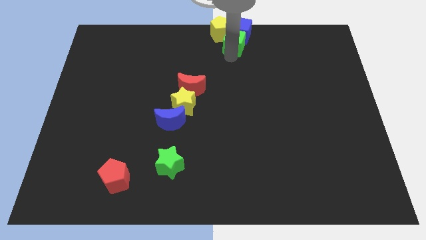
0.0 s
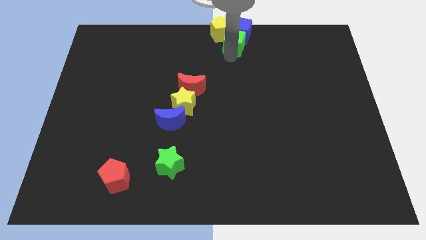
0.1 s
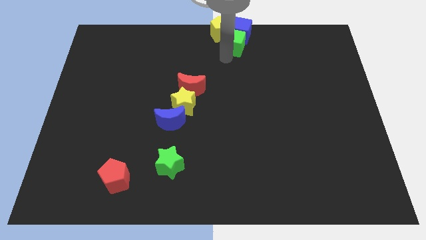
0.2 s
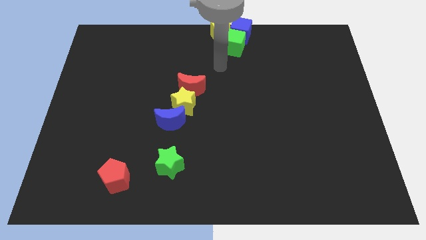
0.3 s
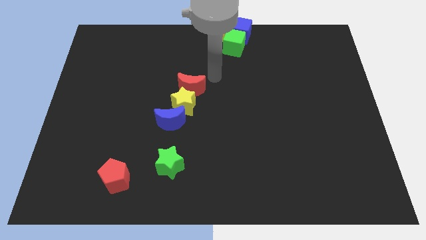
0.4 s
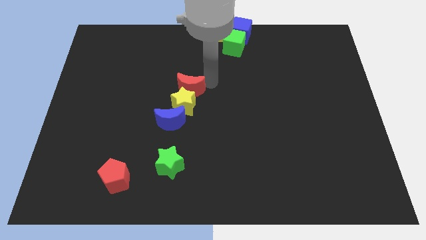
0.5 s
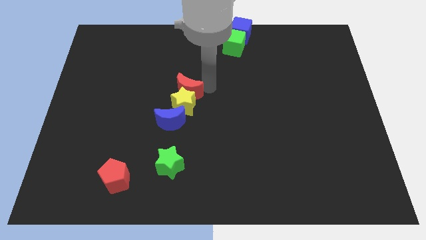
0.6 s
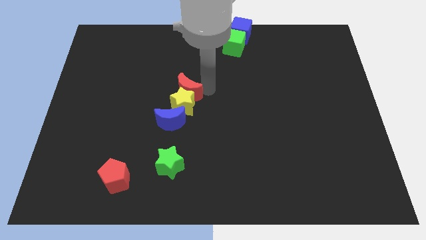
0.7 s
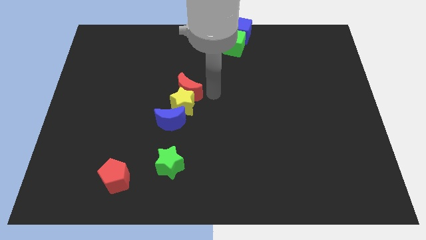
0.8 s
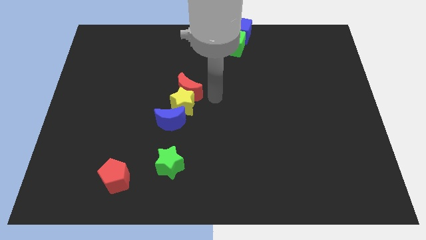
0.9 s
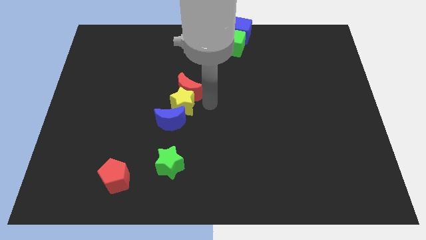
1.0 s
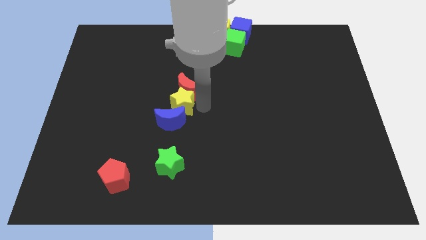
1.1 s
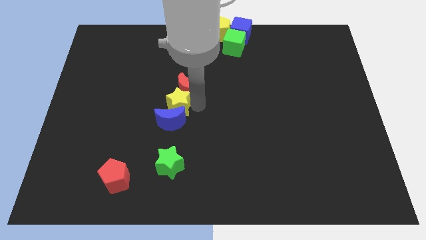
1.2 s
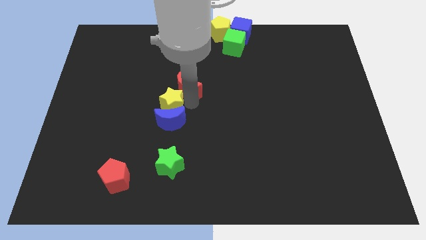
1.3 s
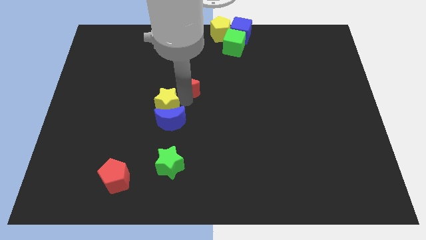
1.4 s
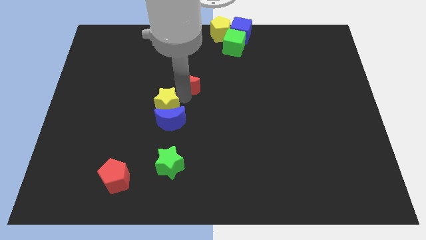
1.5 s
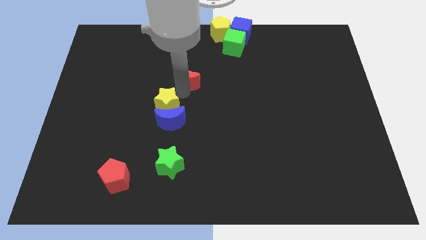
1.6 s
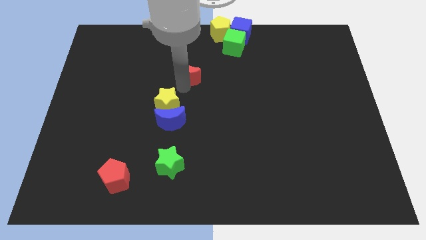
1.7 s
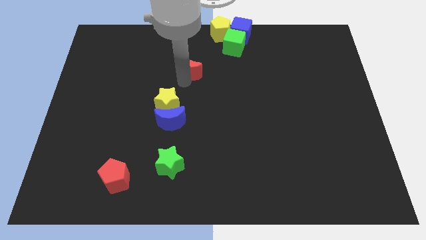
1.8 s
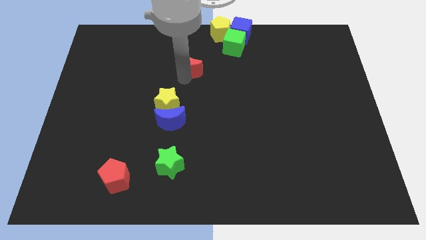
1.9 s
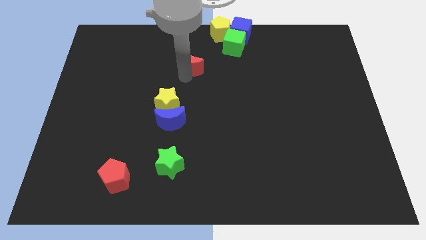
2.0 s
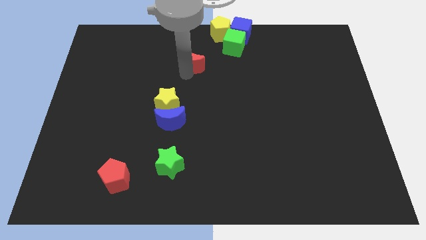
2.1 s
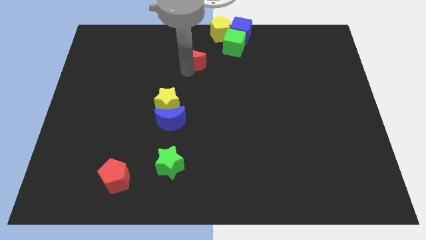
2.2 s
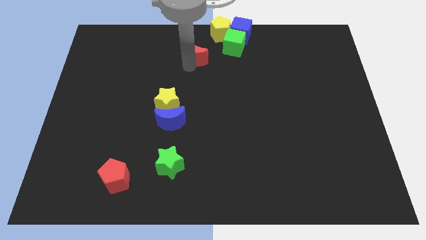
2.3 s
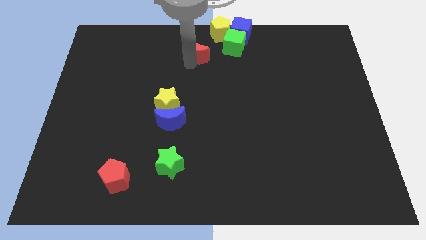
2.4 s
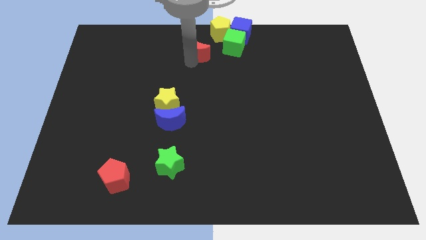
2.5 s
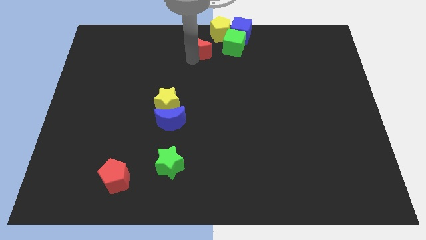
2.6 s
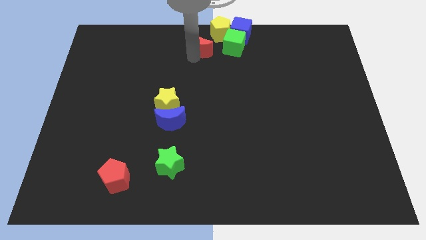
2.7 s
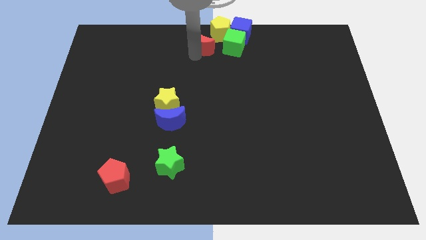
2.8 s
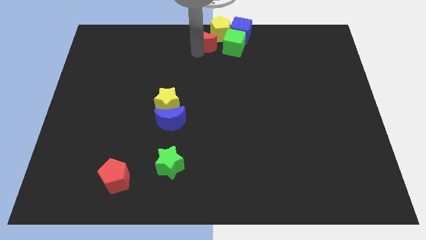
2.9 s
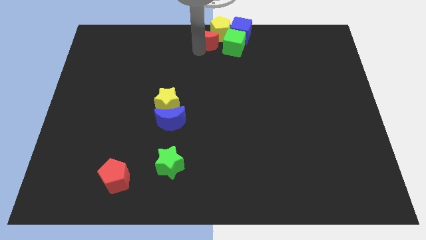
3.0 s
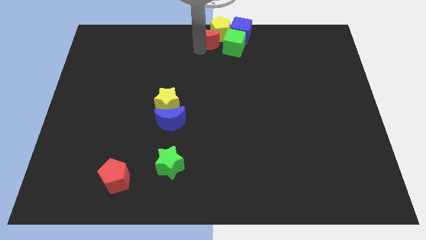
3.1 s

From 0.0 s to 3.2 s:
put the red moon parallel left to the green cube

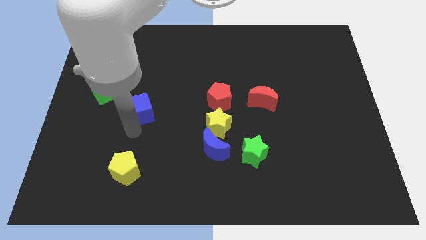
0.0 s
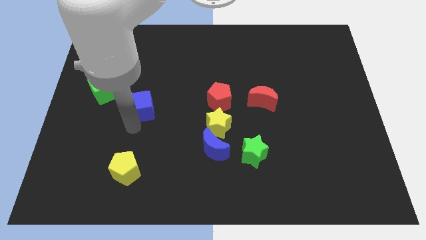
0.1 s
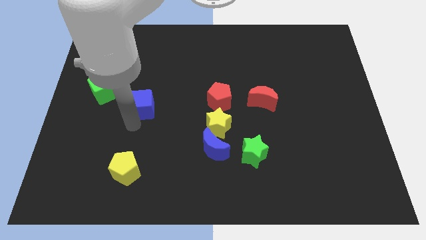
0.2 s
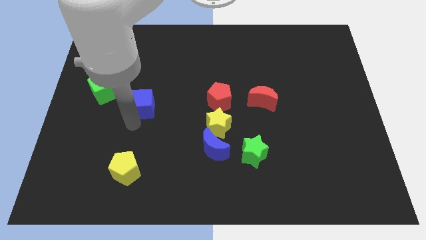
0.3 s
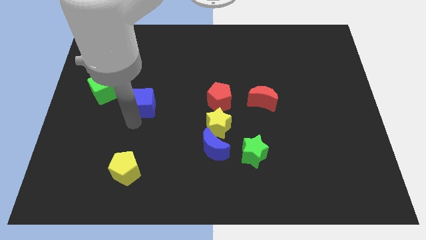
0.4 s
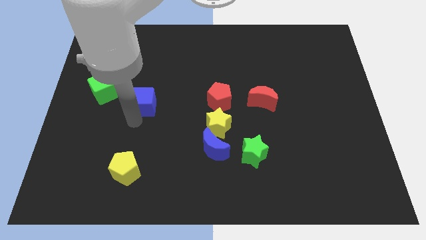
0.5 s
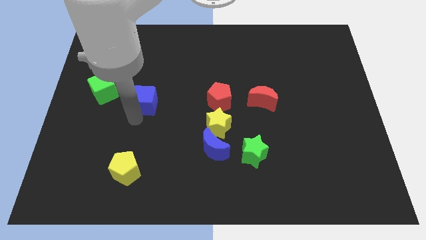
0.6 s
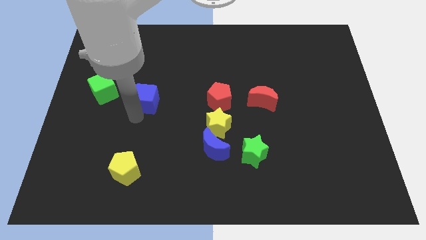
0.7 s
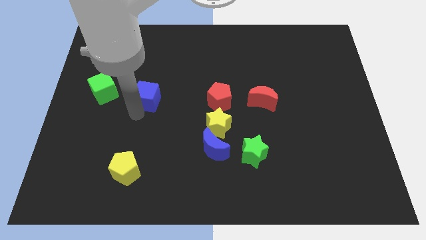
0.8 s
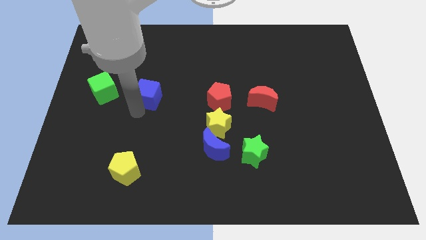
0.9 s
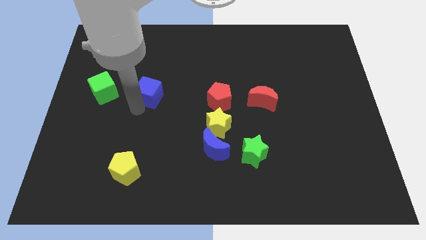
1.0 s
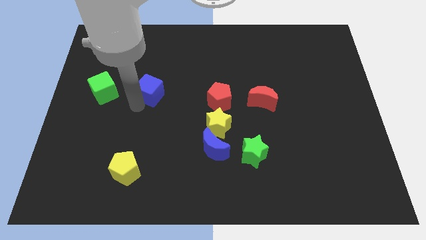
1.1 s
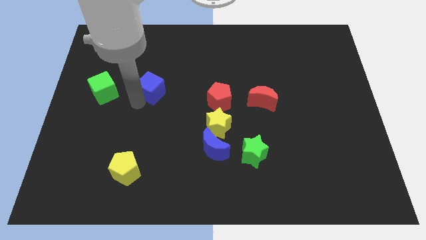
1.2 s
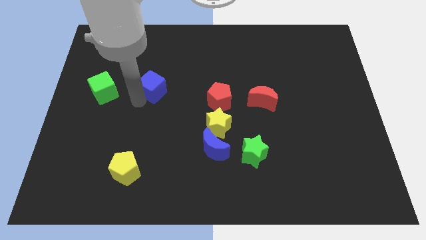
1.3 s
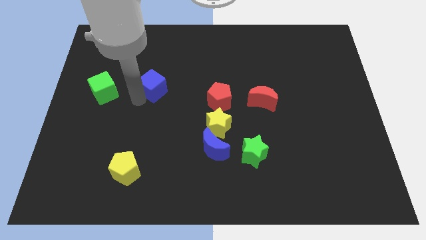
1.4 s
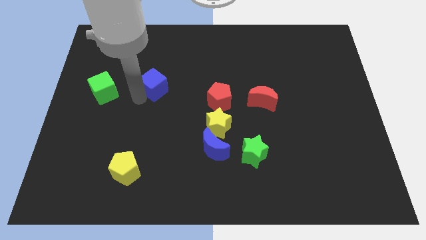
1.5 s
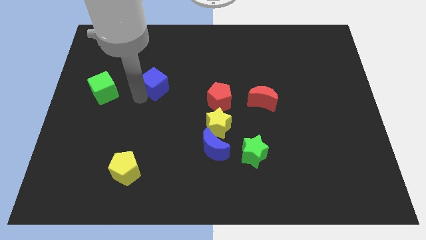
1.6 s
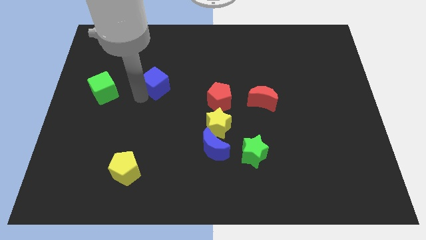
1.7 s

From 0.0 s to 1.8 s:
place blue cube to the right of green cube

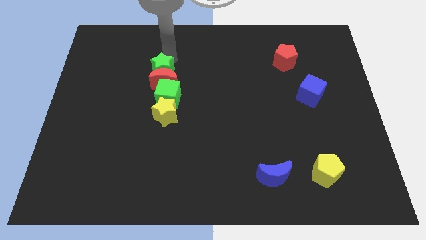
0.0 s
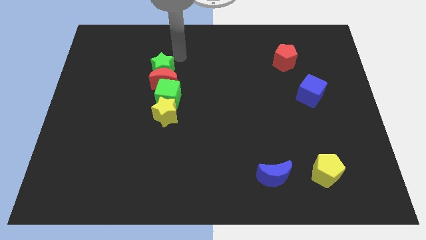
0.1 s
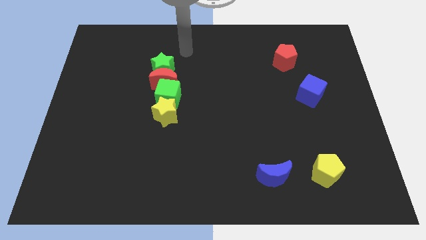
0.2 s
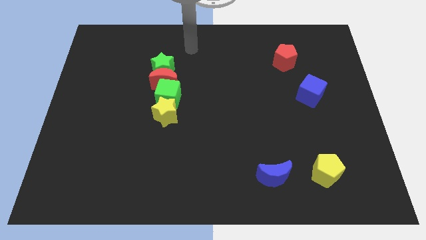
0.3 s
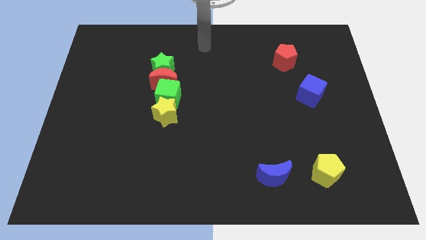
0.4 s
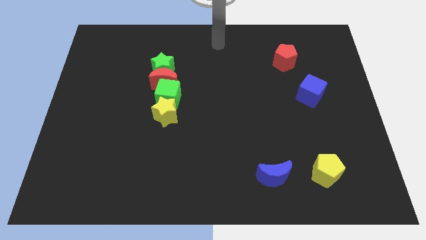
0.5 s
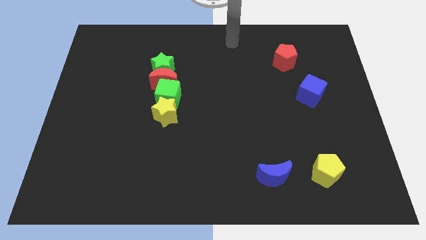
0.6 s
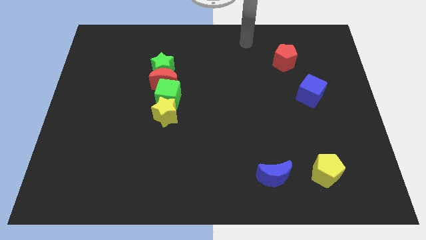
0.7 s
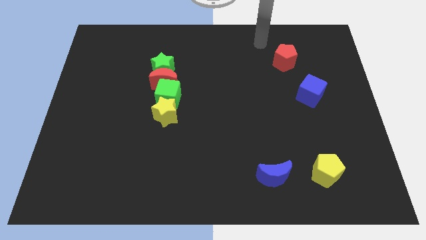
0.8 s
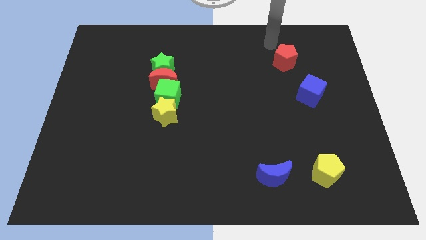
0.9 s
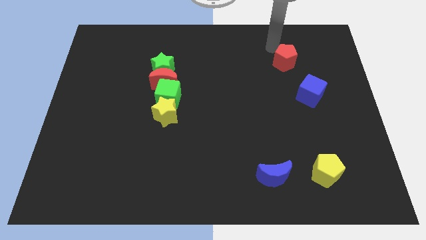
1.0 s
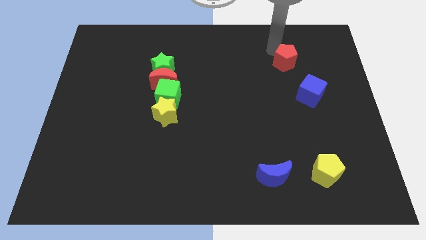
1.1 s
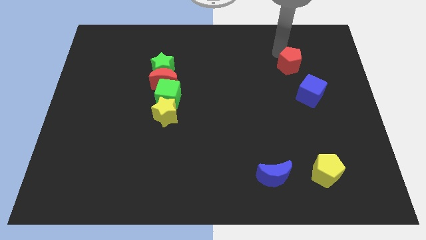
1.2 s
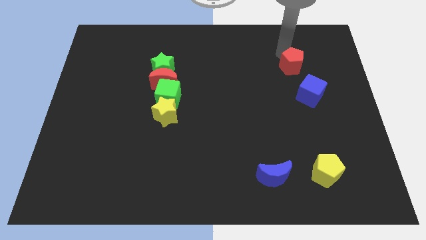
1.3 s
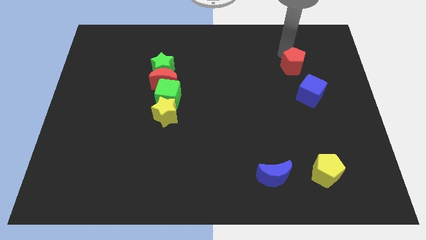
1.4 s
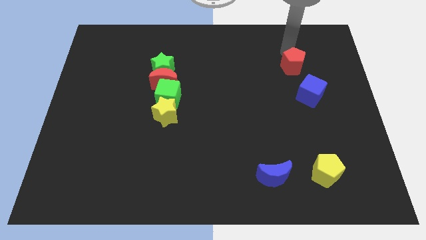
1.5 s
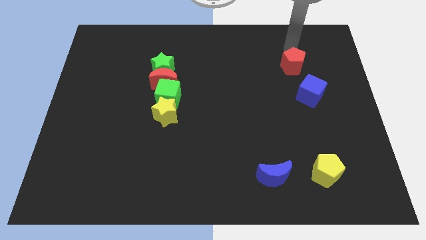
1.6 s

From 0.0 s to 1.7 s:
go near red pentagon

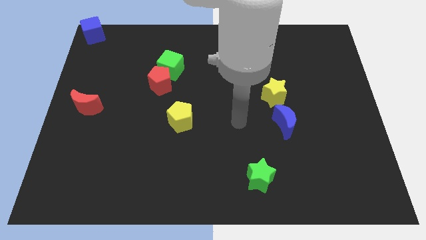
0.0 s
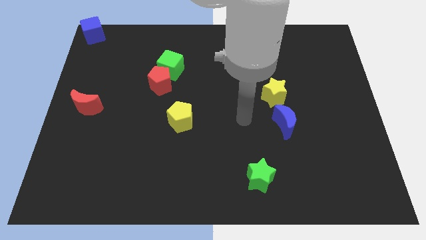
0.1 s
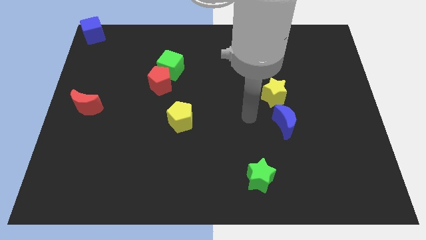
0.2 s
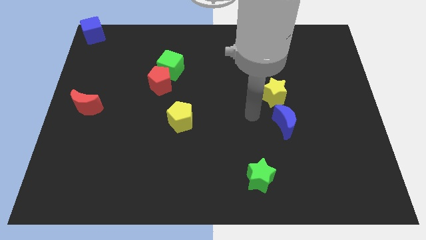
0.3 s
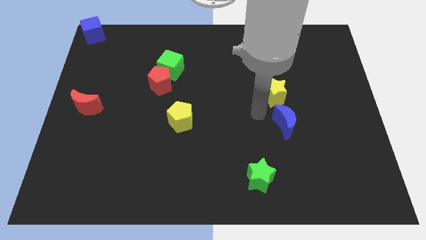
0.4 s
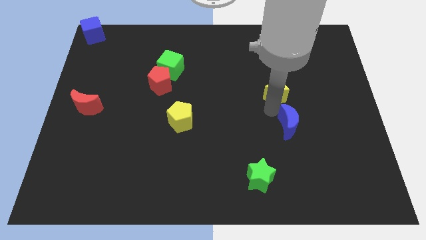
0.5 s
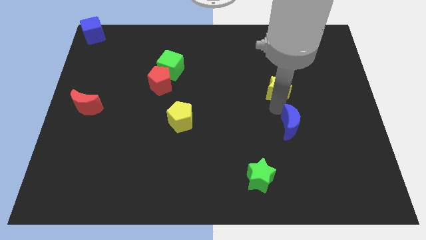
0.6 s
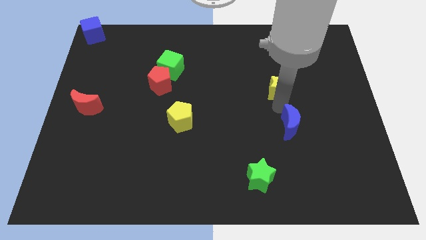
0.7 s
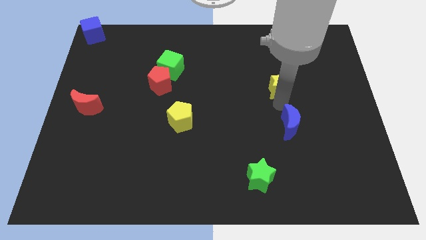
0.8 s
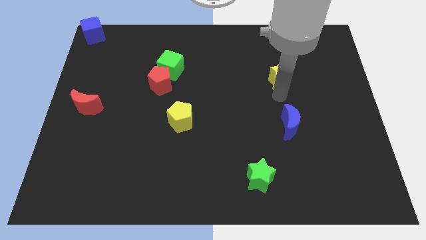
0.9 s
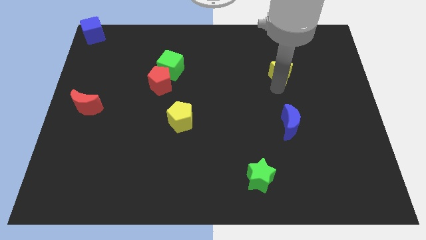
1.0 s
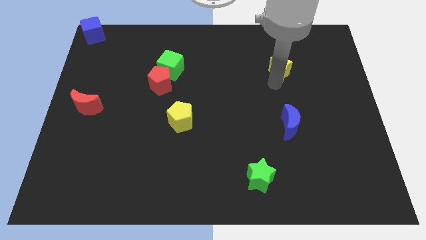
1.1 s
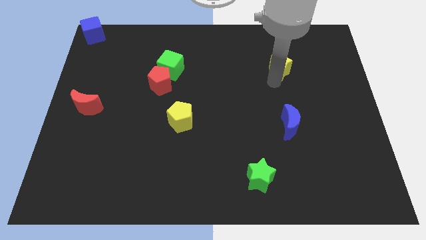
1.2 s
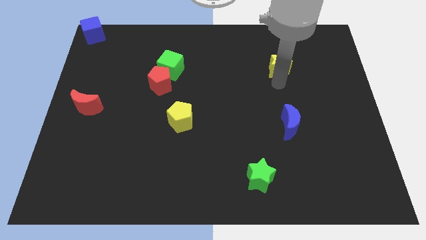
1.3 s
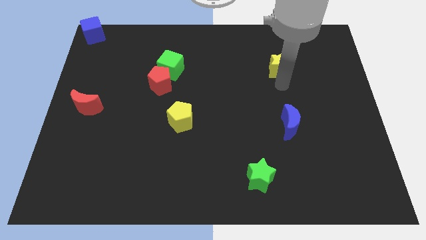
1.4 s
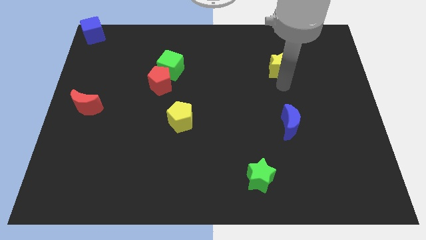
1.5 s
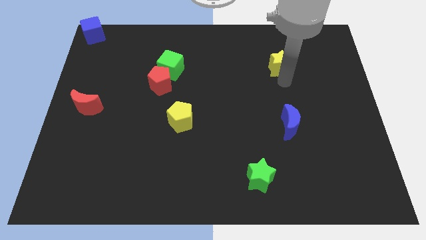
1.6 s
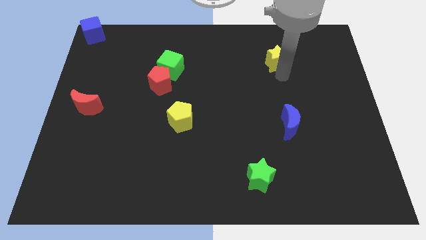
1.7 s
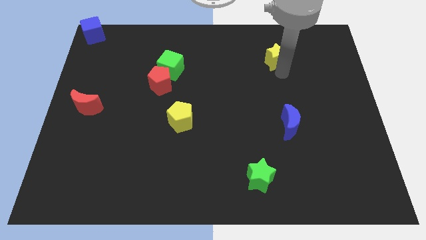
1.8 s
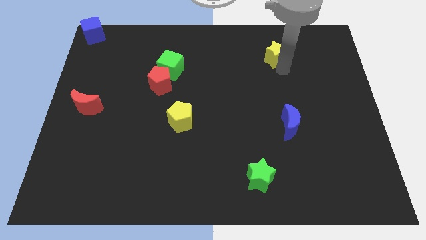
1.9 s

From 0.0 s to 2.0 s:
separate the yellow star and blue crescent

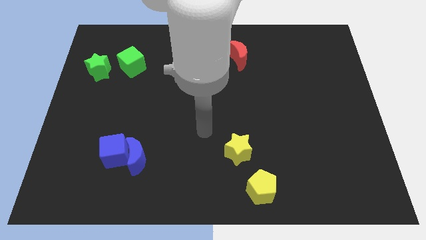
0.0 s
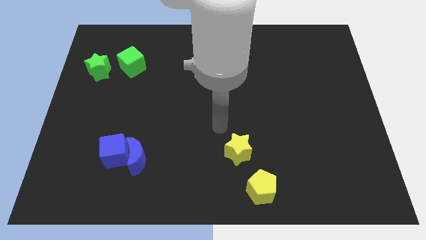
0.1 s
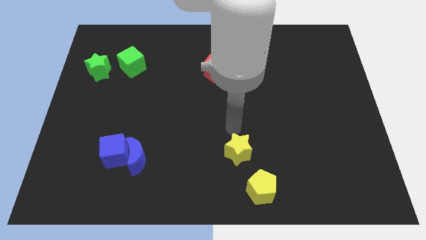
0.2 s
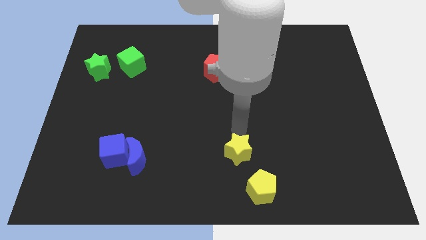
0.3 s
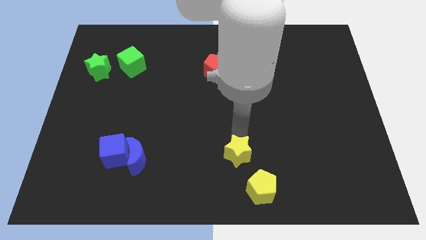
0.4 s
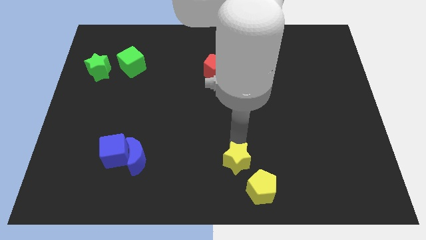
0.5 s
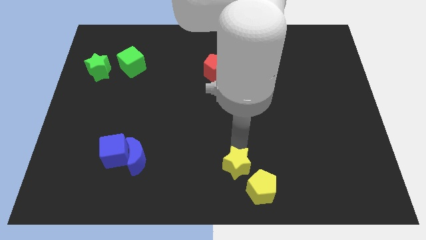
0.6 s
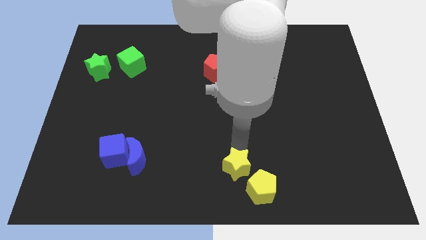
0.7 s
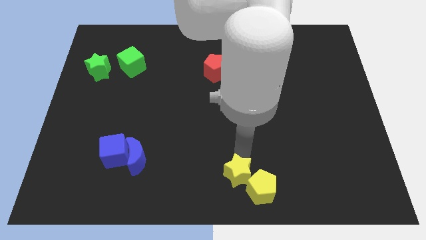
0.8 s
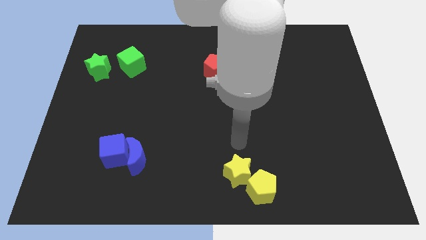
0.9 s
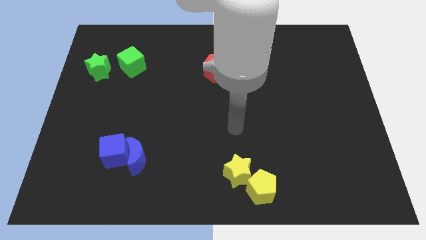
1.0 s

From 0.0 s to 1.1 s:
move the yellow star close to the left of the yellow pentagon
